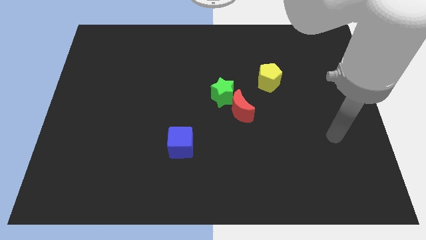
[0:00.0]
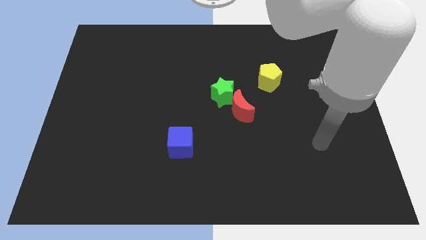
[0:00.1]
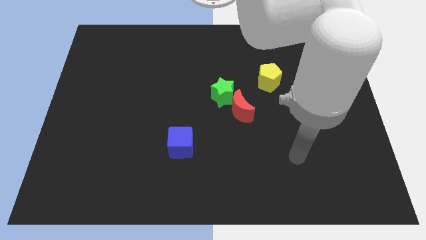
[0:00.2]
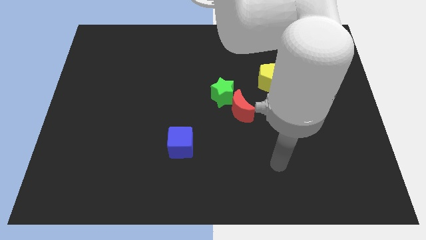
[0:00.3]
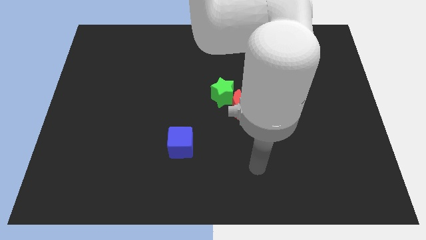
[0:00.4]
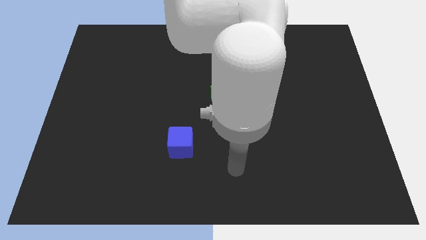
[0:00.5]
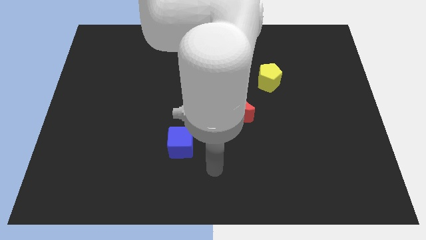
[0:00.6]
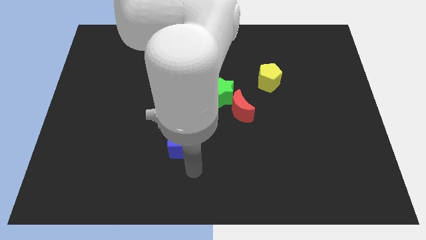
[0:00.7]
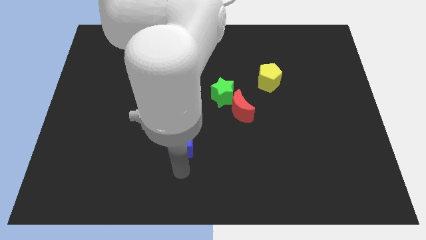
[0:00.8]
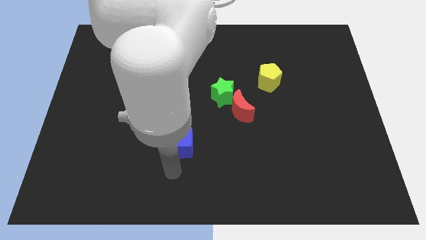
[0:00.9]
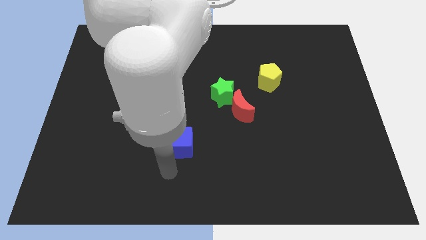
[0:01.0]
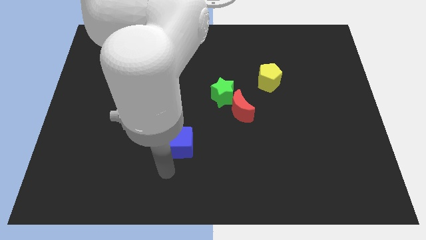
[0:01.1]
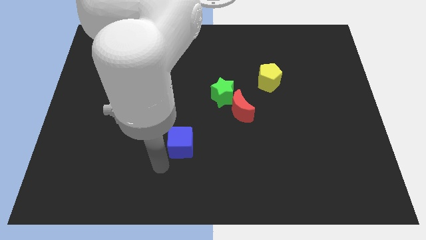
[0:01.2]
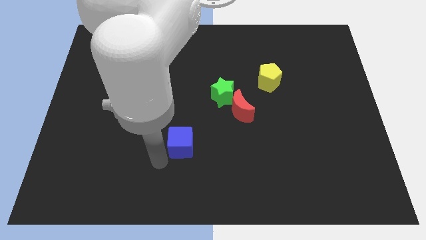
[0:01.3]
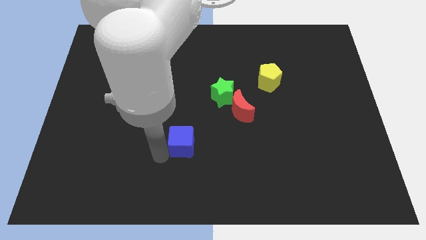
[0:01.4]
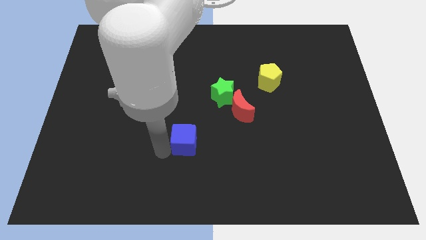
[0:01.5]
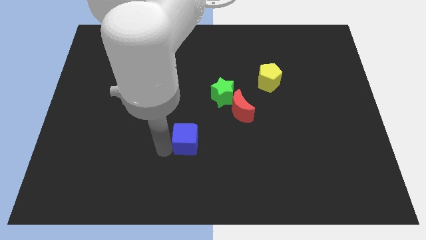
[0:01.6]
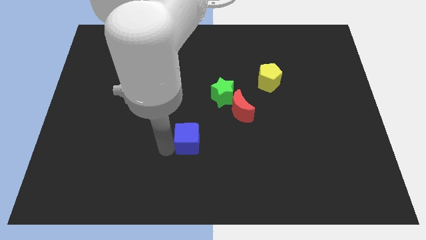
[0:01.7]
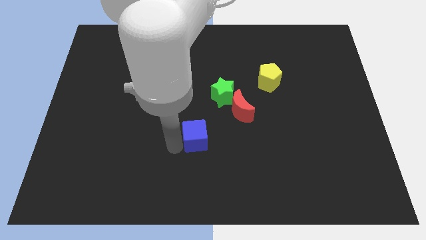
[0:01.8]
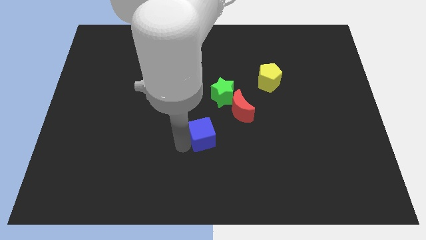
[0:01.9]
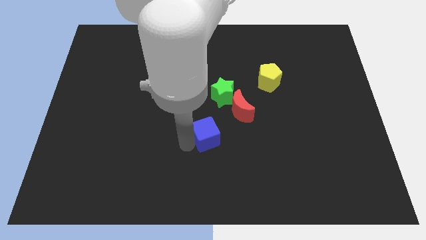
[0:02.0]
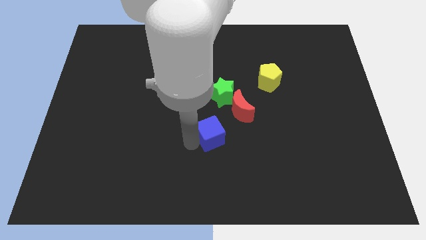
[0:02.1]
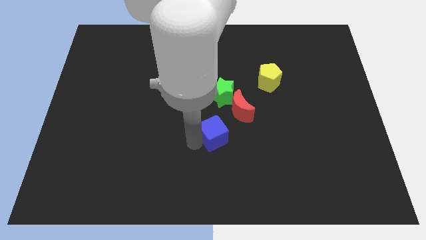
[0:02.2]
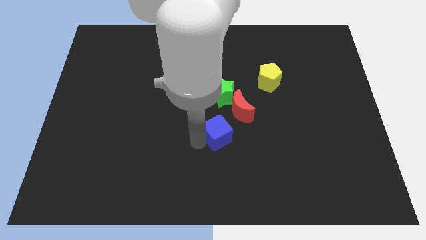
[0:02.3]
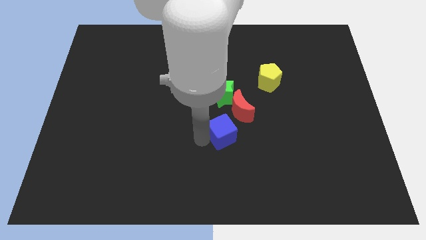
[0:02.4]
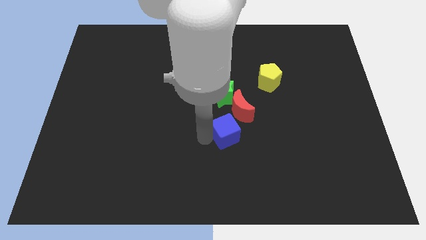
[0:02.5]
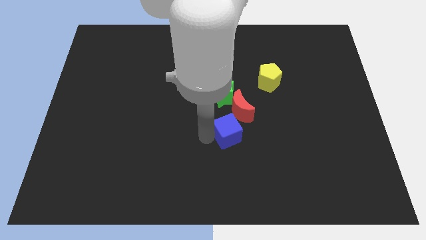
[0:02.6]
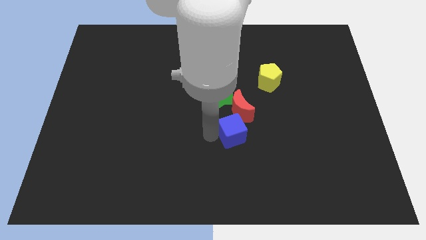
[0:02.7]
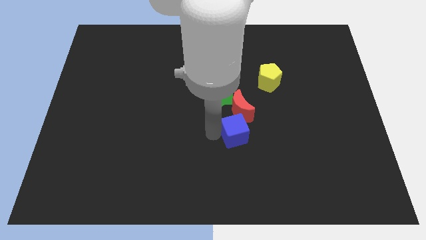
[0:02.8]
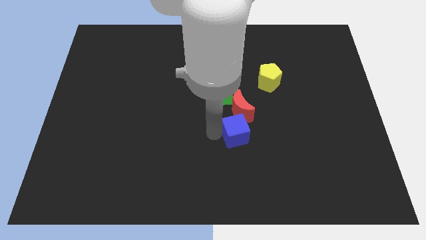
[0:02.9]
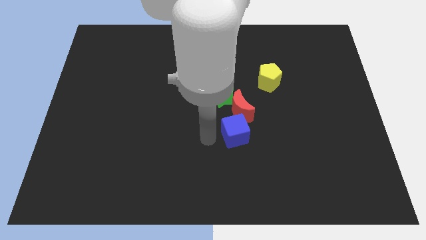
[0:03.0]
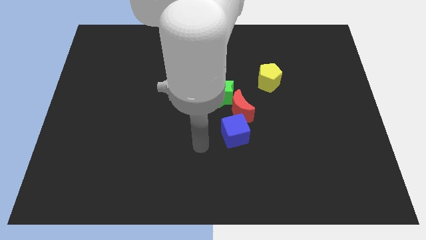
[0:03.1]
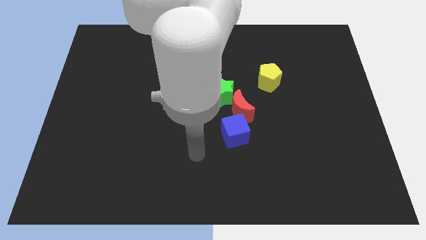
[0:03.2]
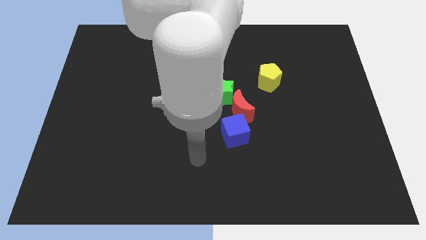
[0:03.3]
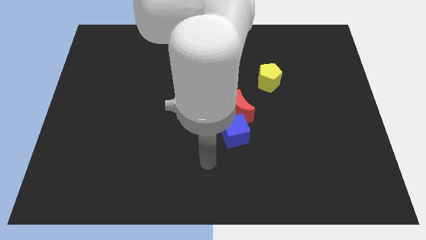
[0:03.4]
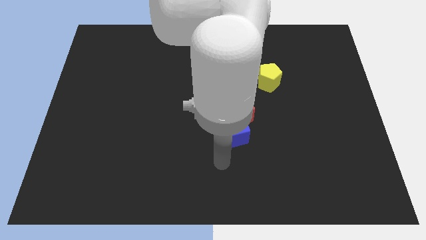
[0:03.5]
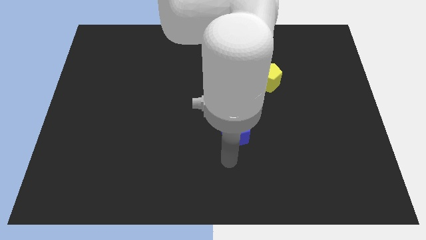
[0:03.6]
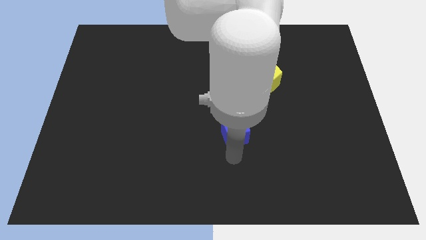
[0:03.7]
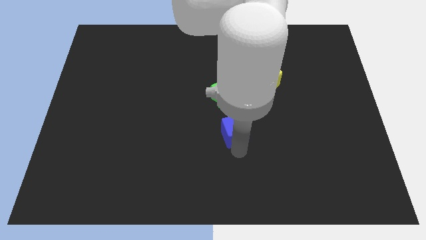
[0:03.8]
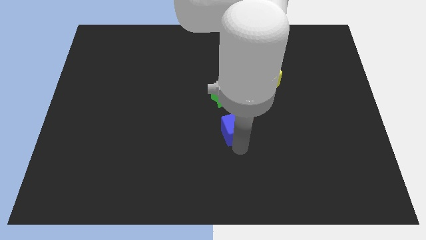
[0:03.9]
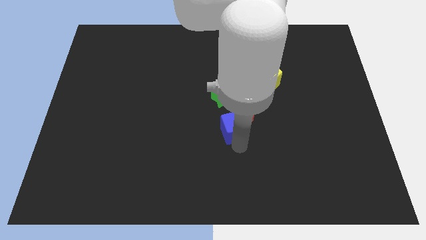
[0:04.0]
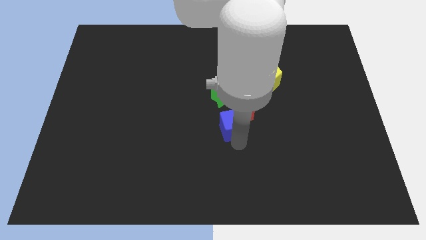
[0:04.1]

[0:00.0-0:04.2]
move the blue cube close to the red moon

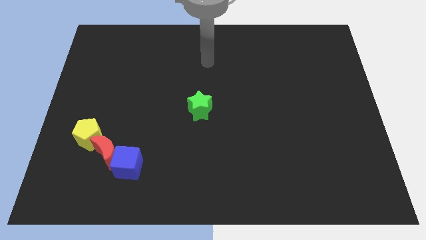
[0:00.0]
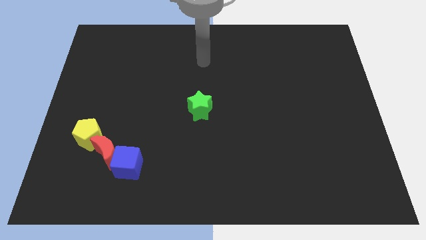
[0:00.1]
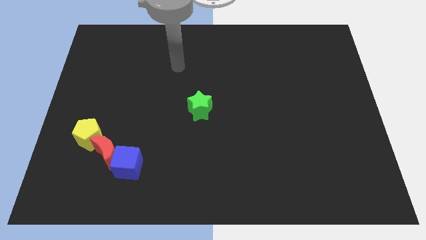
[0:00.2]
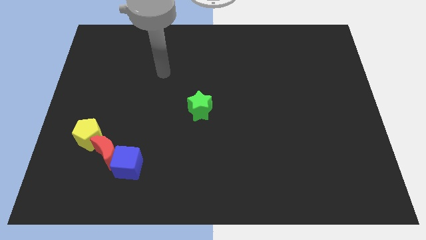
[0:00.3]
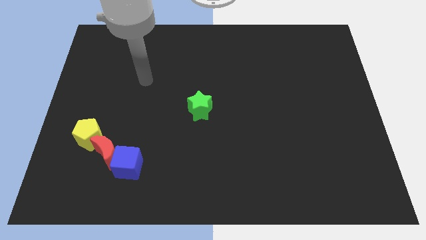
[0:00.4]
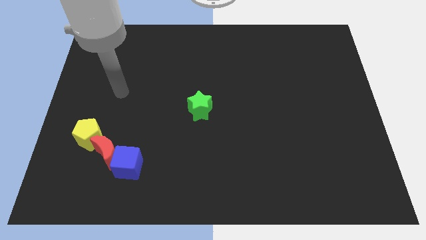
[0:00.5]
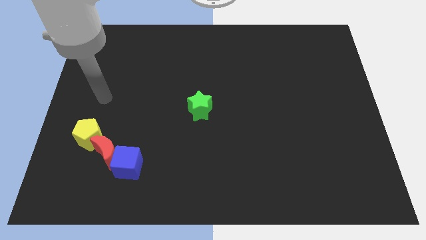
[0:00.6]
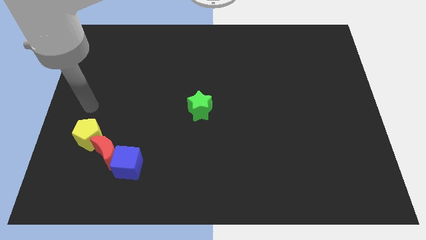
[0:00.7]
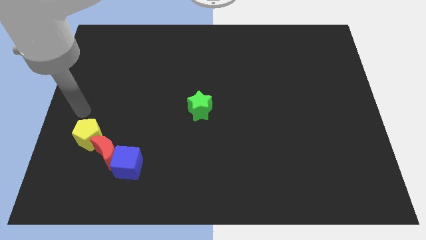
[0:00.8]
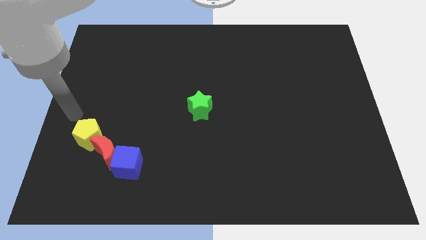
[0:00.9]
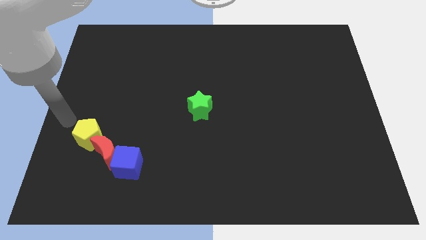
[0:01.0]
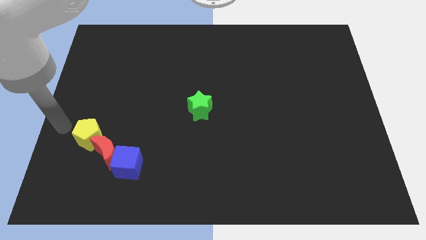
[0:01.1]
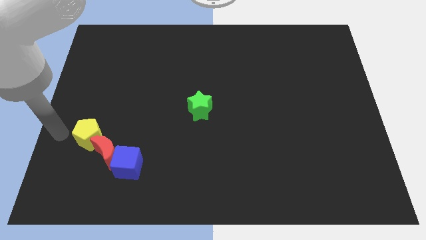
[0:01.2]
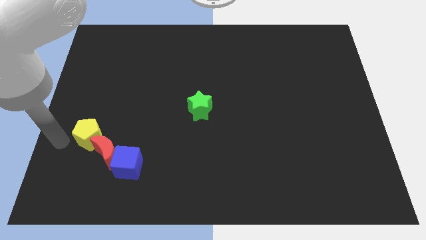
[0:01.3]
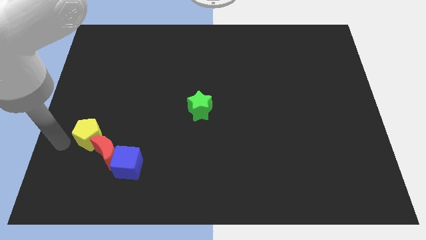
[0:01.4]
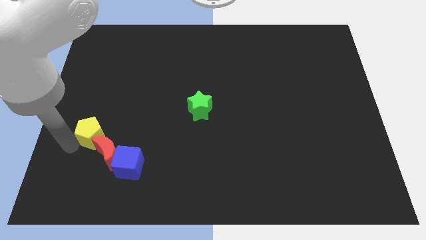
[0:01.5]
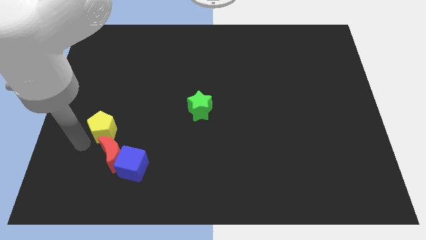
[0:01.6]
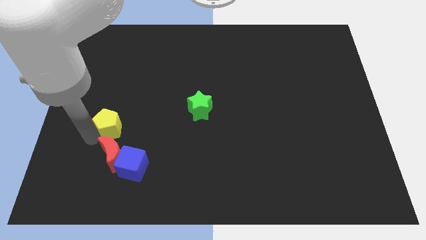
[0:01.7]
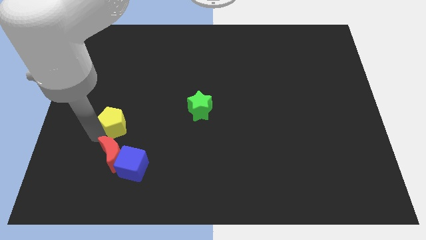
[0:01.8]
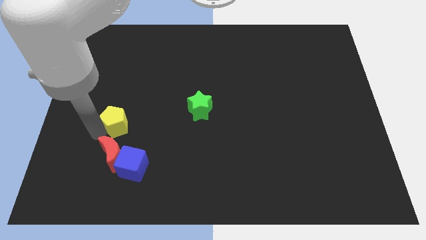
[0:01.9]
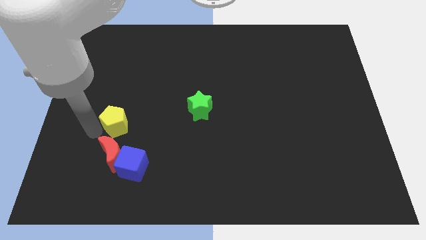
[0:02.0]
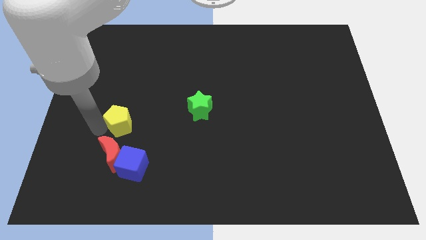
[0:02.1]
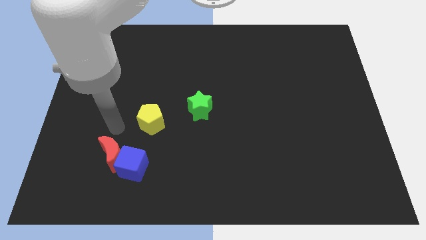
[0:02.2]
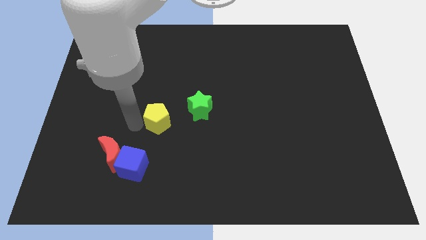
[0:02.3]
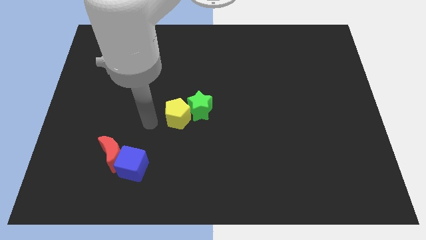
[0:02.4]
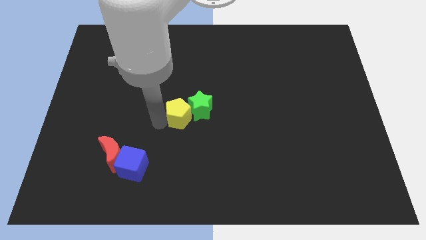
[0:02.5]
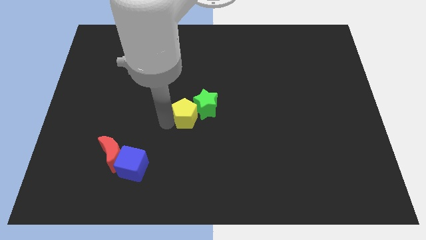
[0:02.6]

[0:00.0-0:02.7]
push the yellow pentagon towards the green block

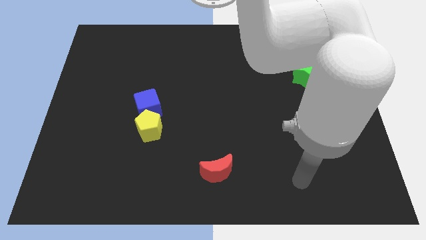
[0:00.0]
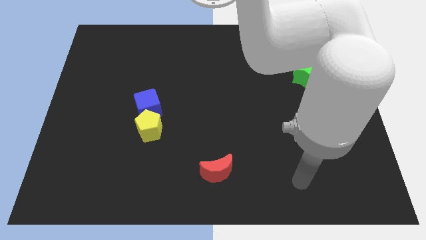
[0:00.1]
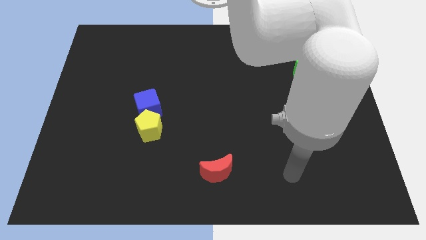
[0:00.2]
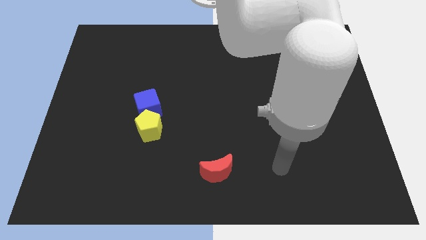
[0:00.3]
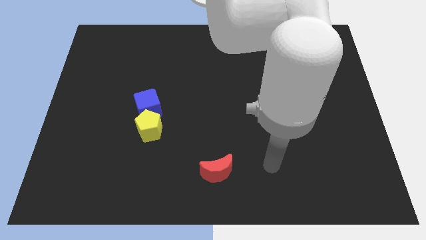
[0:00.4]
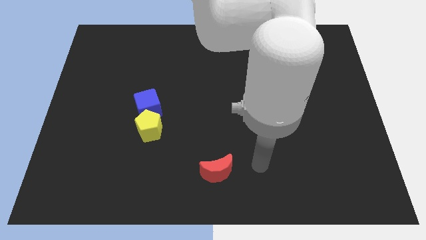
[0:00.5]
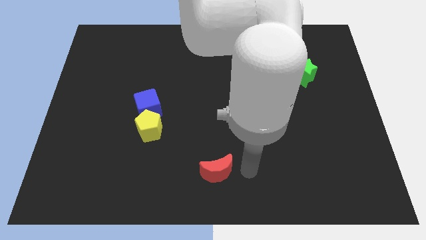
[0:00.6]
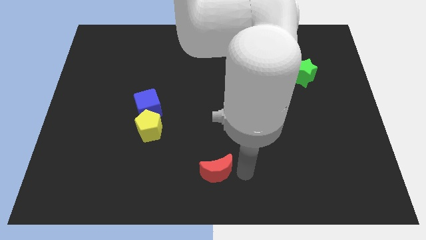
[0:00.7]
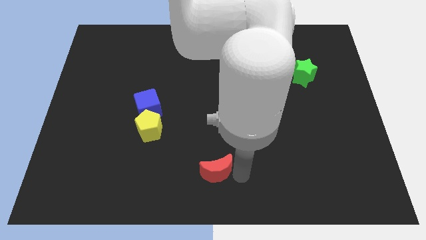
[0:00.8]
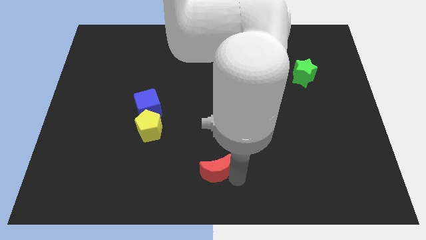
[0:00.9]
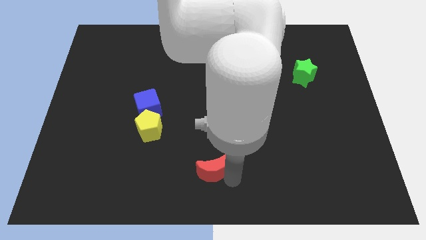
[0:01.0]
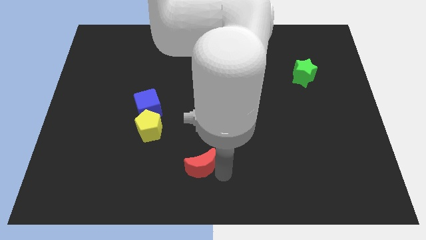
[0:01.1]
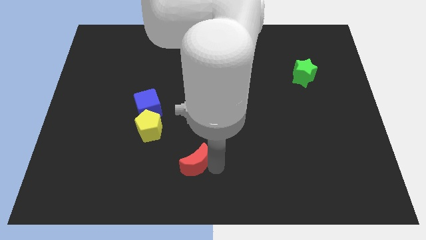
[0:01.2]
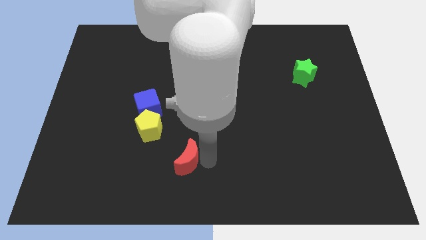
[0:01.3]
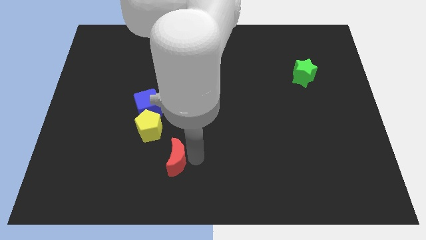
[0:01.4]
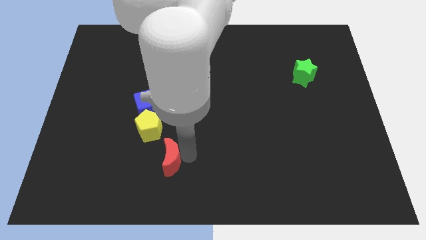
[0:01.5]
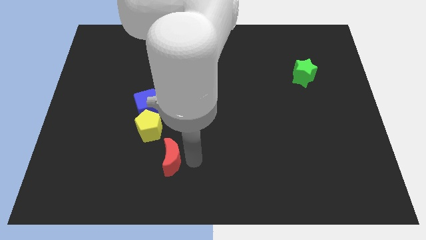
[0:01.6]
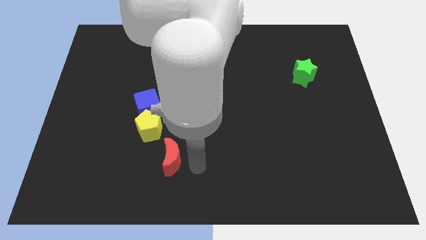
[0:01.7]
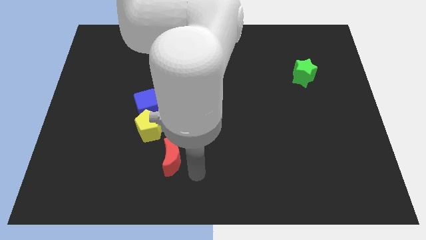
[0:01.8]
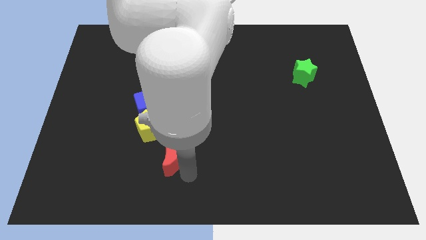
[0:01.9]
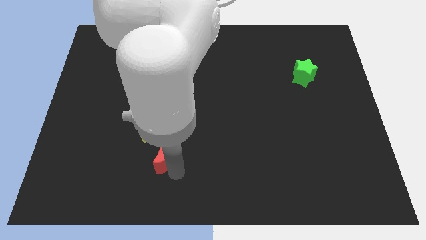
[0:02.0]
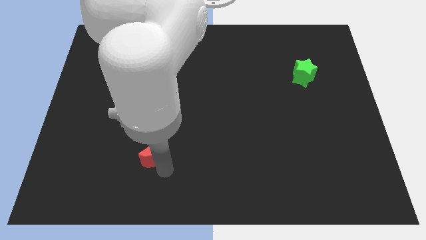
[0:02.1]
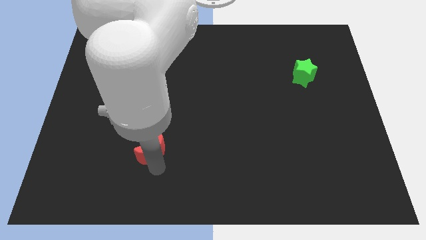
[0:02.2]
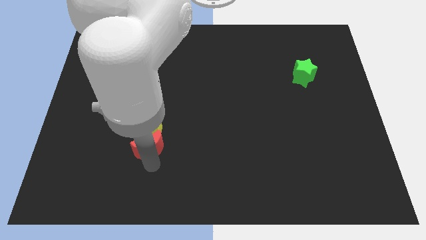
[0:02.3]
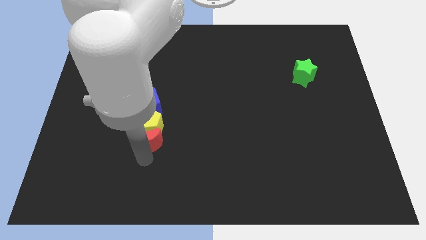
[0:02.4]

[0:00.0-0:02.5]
push the red block next to the yellow pentagon
